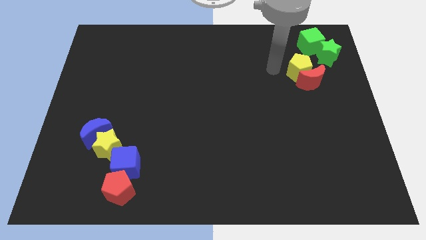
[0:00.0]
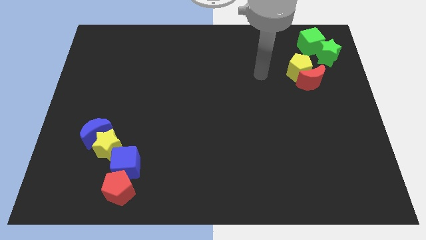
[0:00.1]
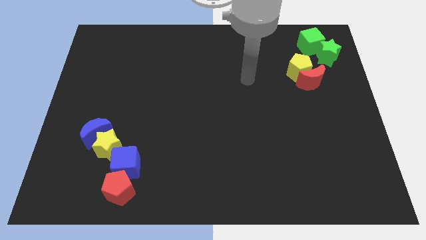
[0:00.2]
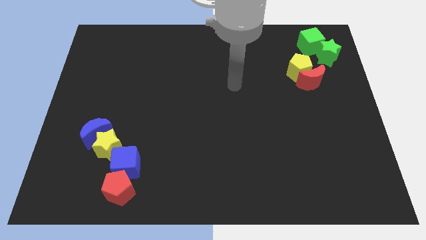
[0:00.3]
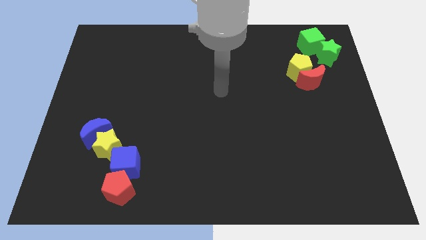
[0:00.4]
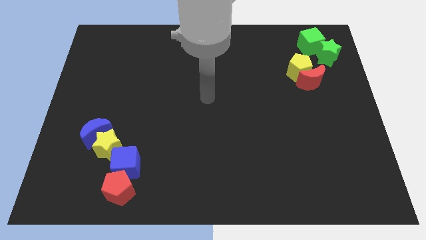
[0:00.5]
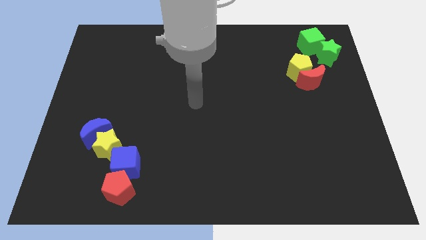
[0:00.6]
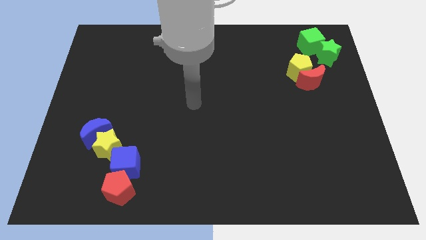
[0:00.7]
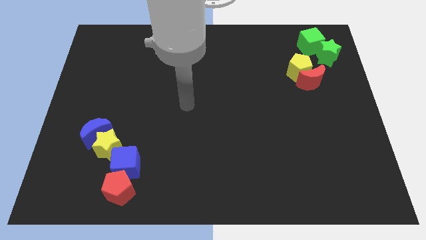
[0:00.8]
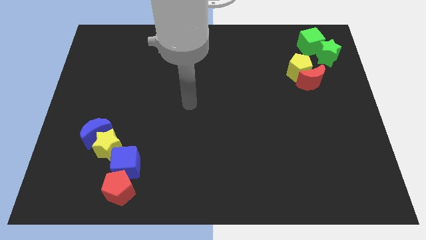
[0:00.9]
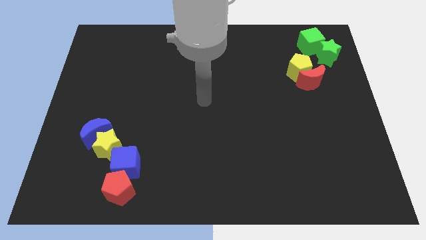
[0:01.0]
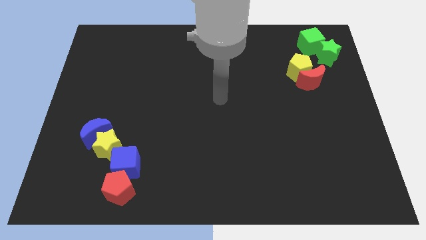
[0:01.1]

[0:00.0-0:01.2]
place your arm at the center of the board

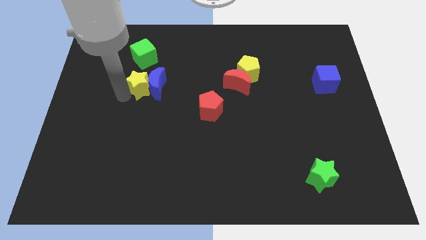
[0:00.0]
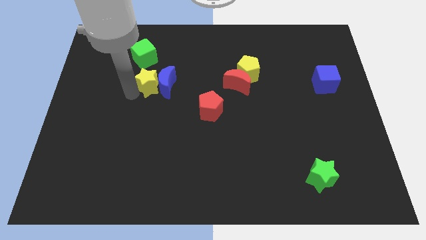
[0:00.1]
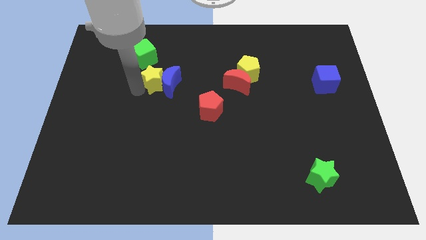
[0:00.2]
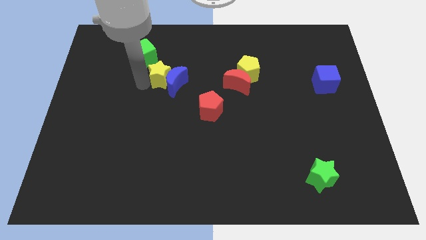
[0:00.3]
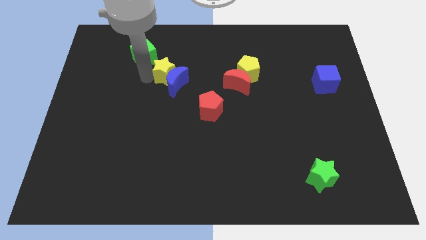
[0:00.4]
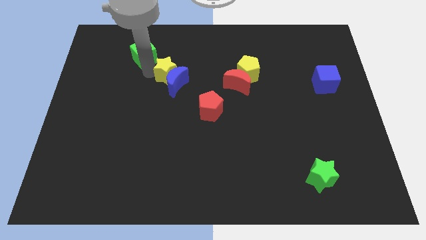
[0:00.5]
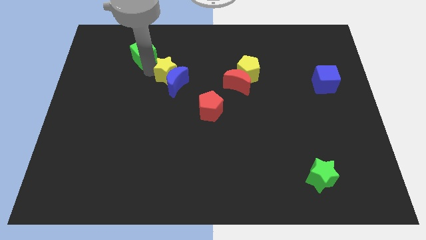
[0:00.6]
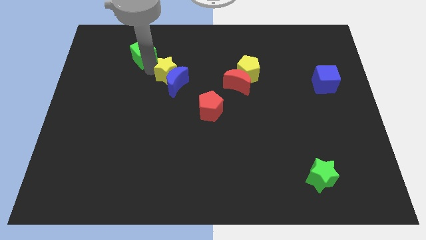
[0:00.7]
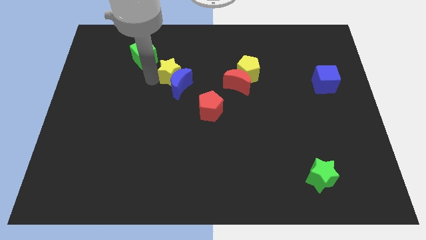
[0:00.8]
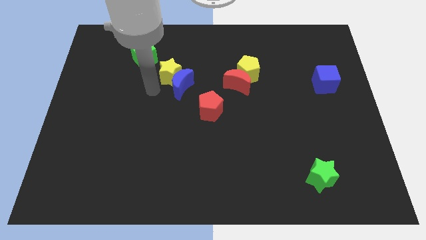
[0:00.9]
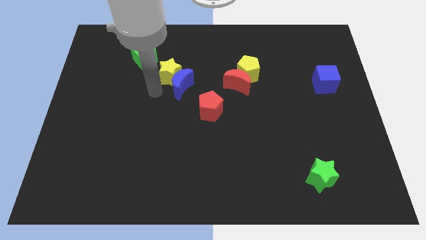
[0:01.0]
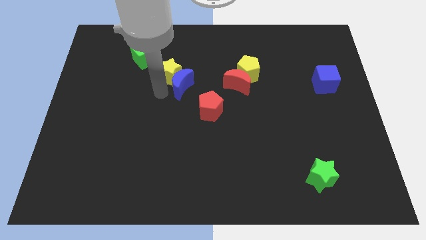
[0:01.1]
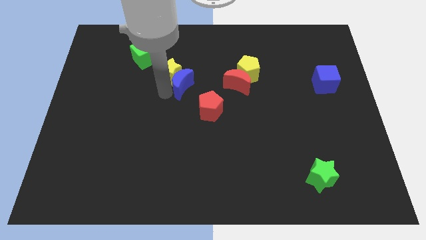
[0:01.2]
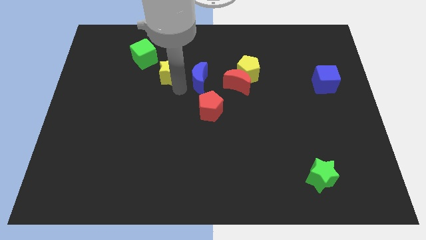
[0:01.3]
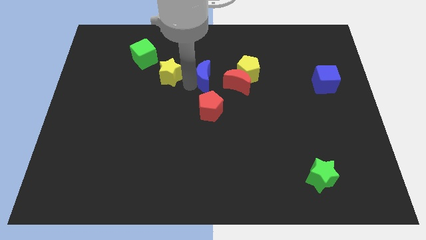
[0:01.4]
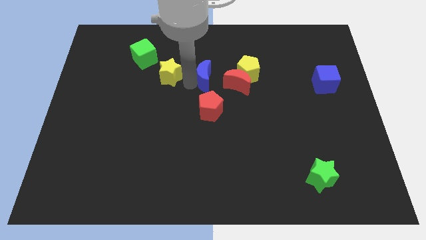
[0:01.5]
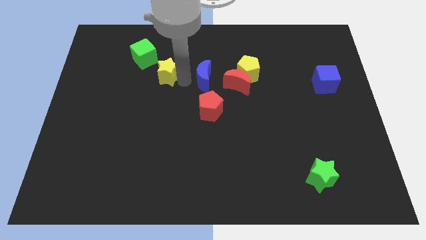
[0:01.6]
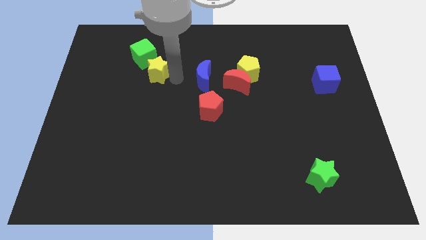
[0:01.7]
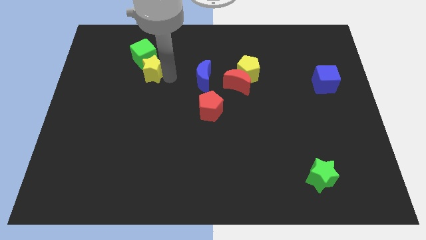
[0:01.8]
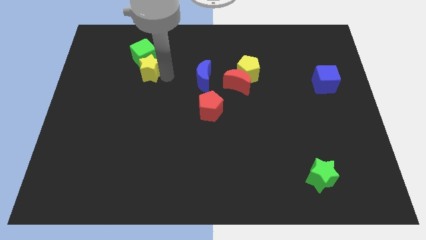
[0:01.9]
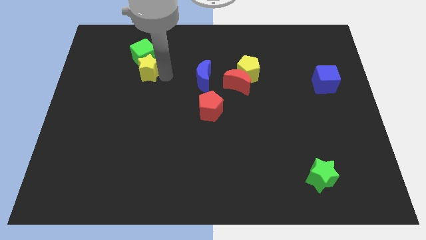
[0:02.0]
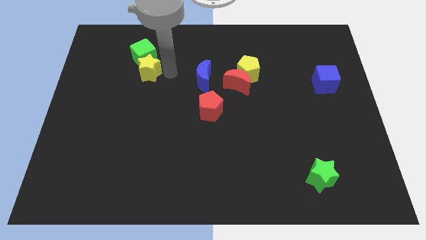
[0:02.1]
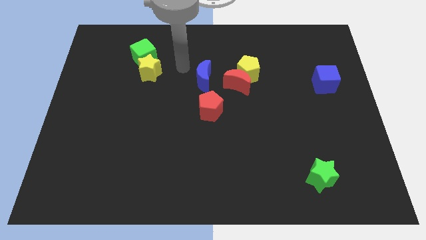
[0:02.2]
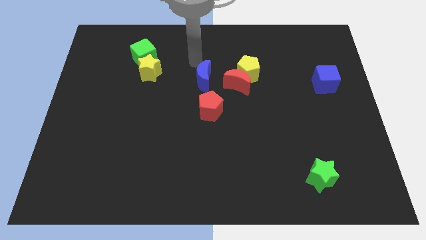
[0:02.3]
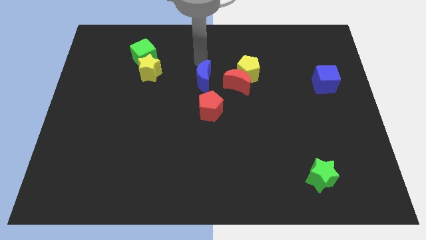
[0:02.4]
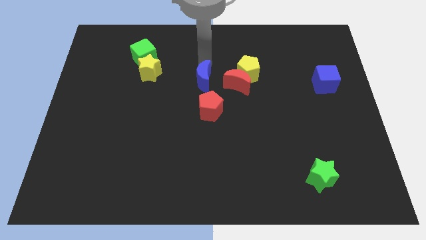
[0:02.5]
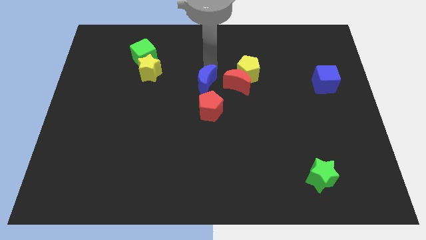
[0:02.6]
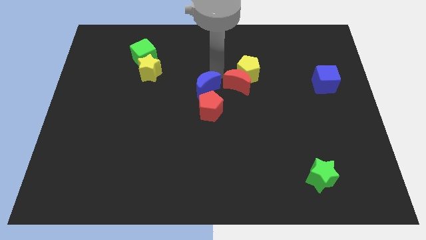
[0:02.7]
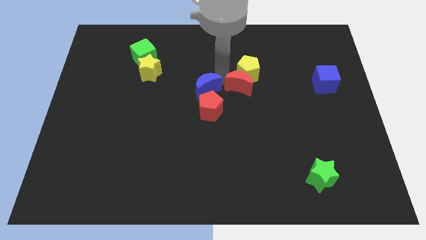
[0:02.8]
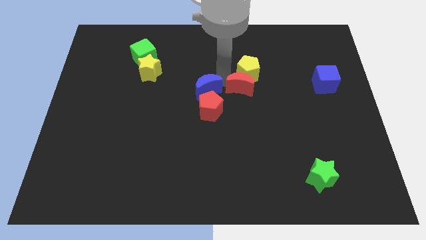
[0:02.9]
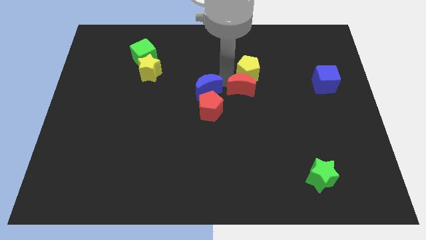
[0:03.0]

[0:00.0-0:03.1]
separate the yellow star from the blue moon

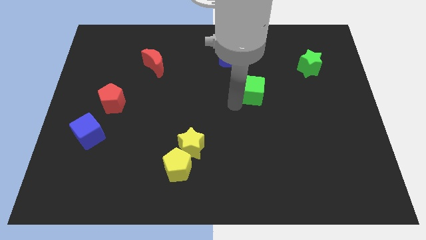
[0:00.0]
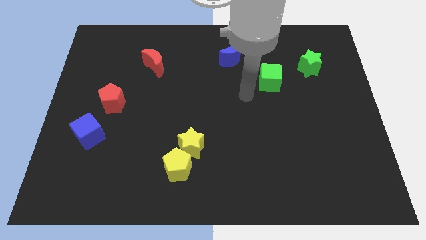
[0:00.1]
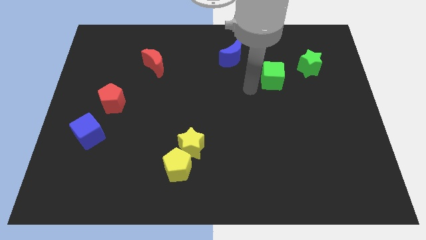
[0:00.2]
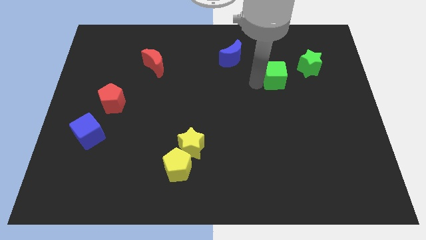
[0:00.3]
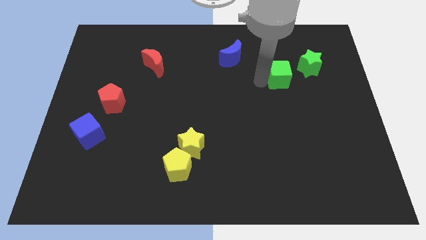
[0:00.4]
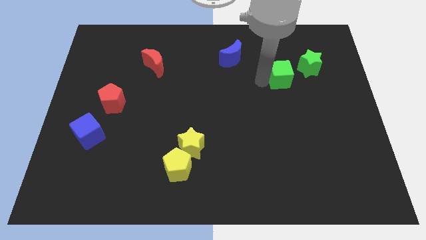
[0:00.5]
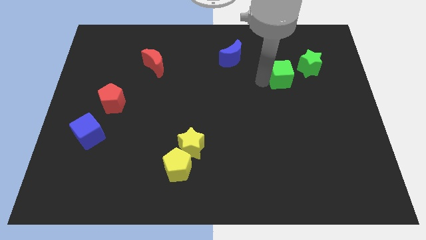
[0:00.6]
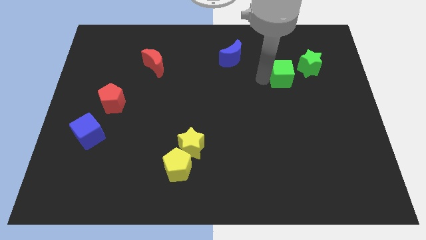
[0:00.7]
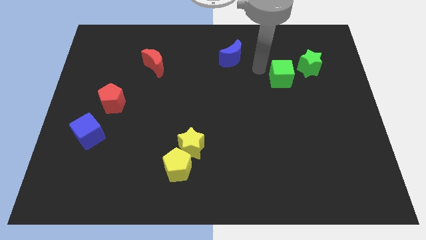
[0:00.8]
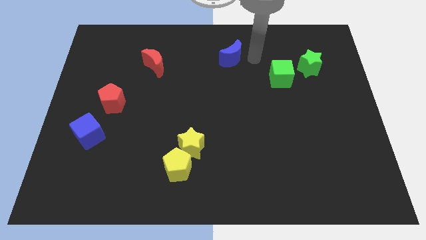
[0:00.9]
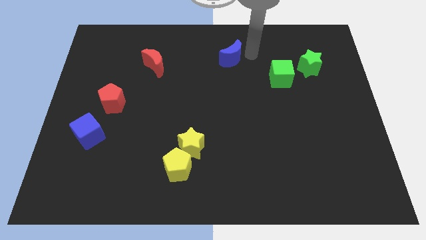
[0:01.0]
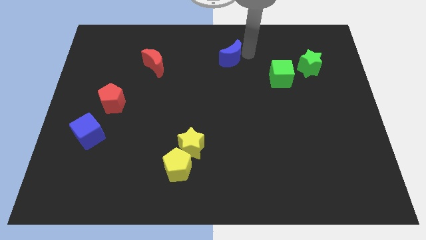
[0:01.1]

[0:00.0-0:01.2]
place green cube left of green star

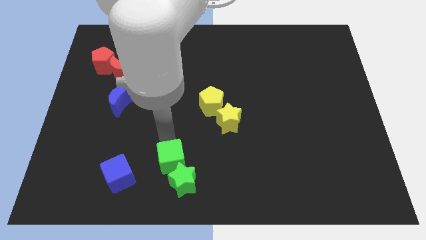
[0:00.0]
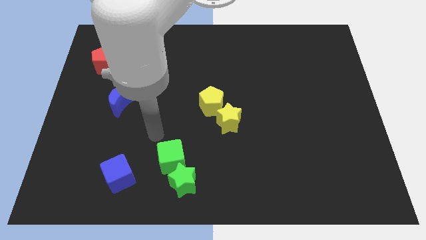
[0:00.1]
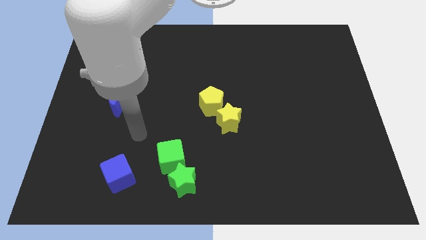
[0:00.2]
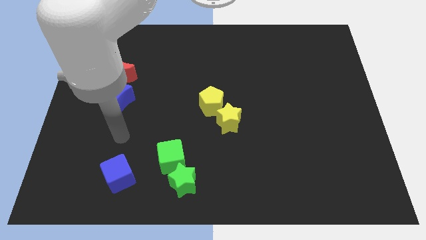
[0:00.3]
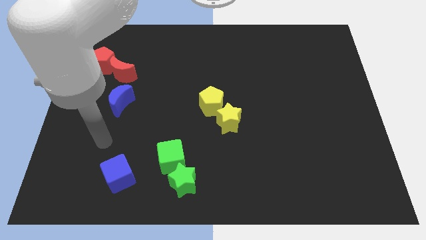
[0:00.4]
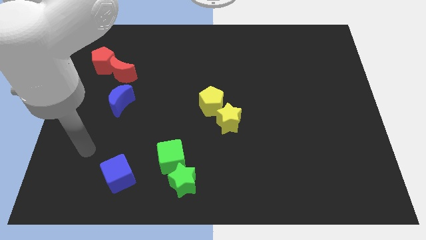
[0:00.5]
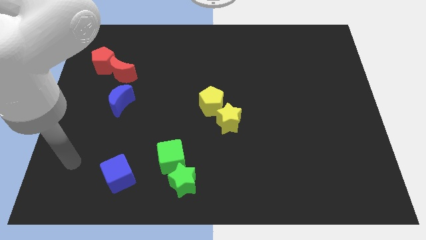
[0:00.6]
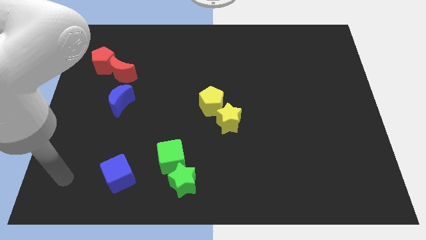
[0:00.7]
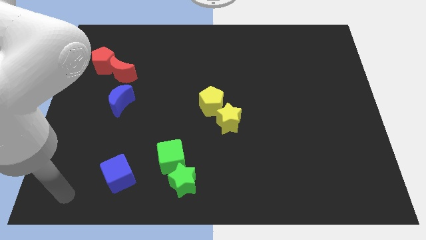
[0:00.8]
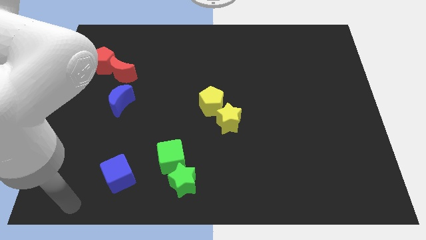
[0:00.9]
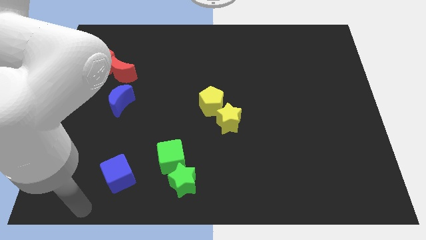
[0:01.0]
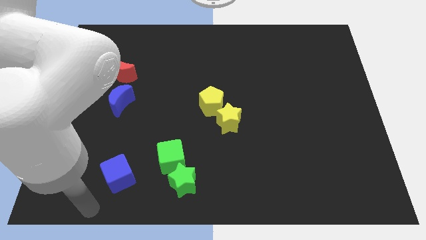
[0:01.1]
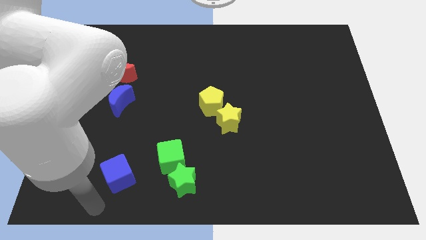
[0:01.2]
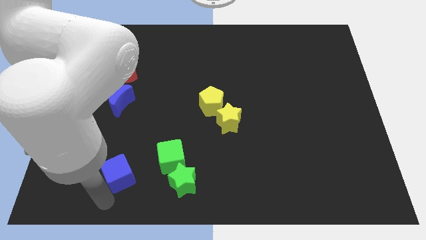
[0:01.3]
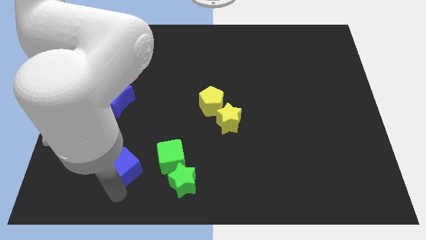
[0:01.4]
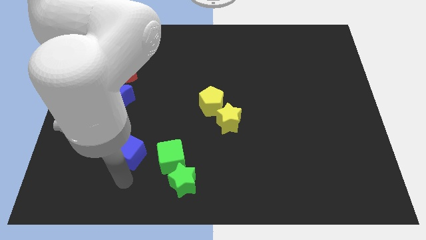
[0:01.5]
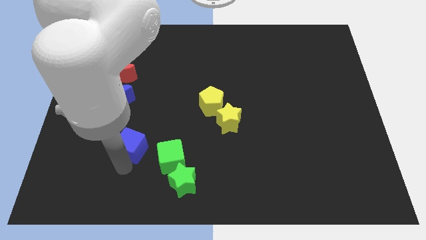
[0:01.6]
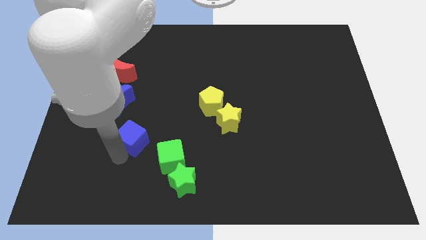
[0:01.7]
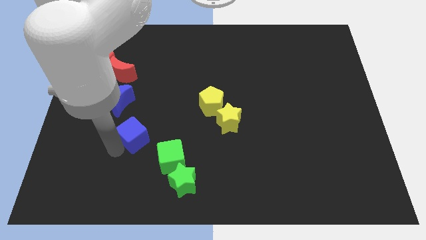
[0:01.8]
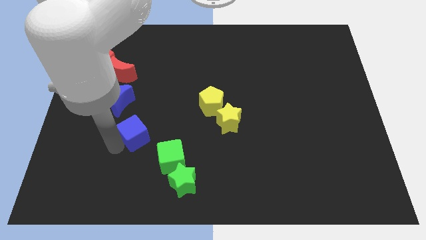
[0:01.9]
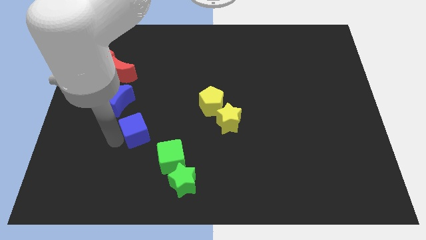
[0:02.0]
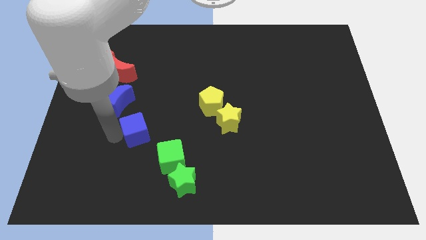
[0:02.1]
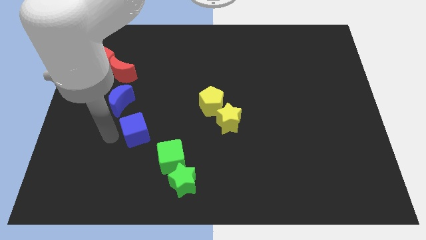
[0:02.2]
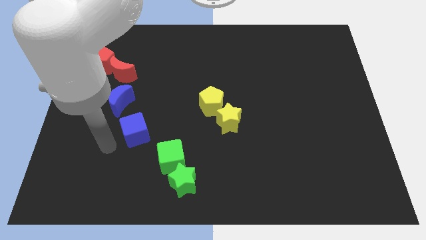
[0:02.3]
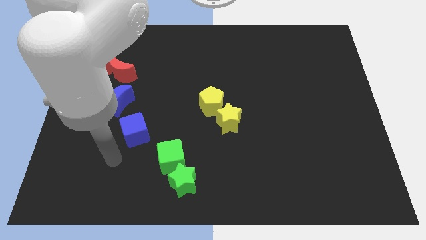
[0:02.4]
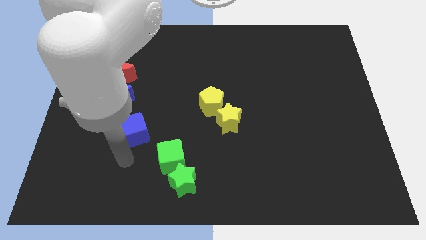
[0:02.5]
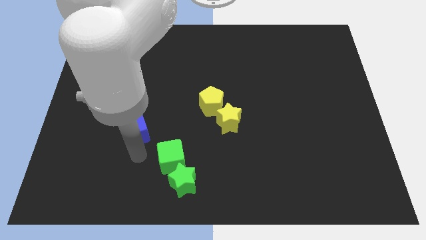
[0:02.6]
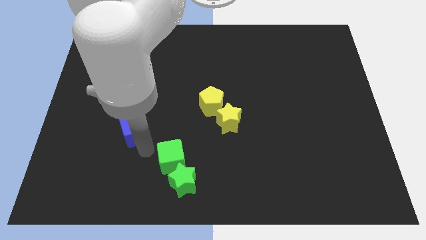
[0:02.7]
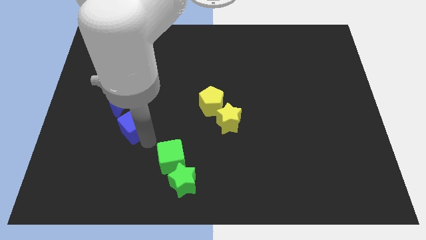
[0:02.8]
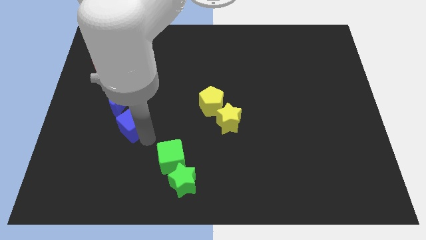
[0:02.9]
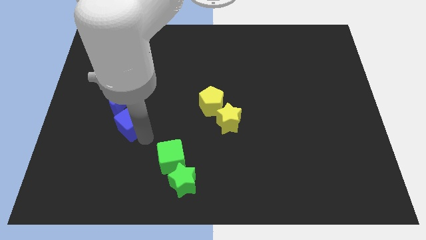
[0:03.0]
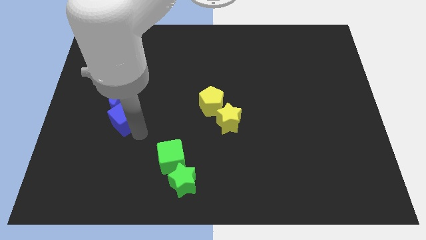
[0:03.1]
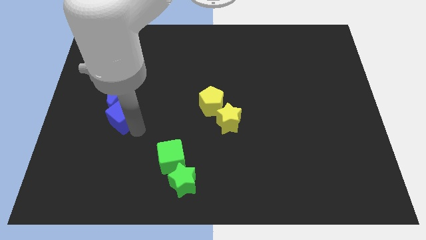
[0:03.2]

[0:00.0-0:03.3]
push the blue cube to the bottom of the blue crescent

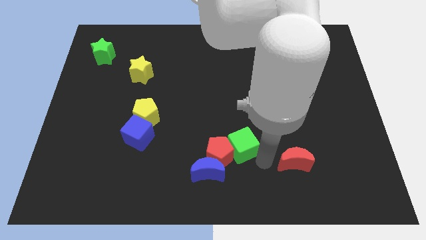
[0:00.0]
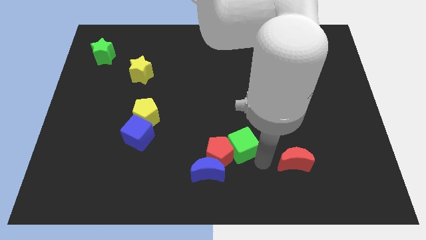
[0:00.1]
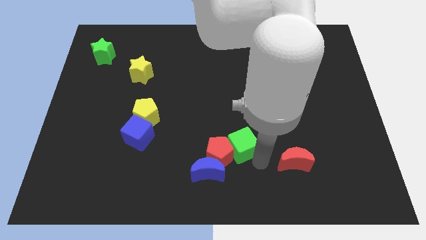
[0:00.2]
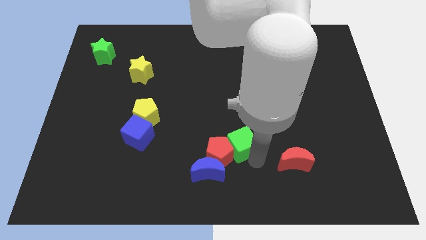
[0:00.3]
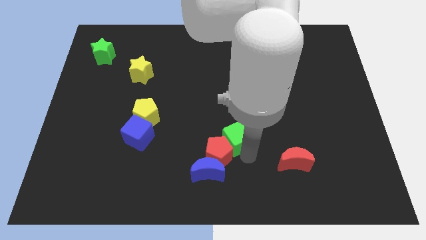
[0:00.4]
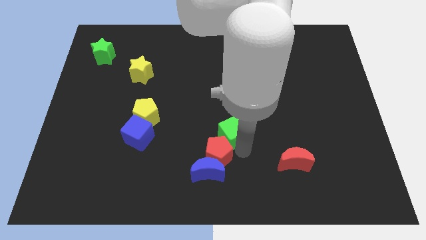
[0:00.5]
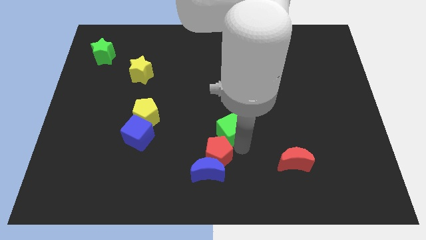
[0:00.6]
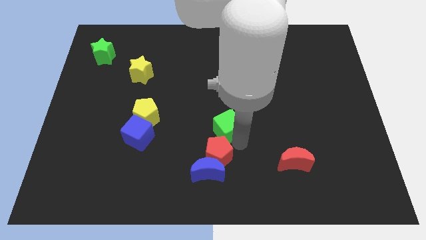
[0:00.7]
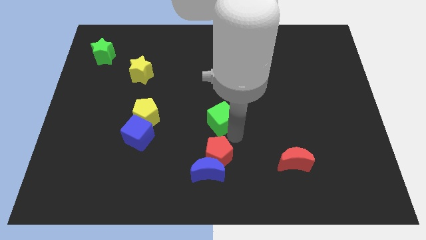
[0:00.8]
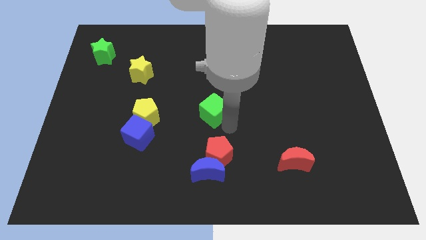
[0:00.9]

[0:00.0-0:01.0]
push the green cube to the center of the board
